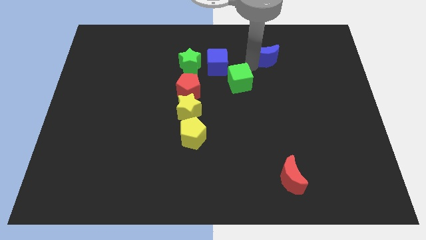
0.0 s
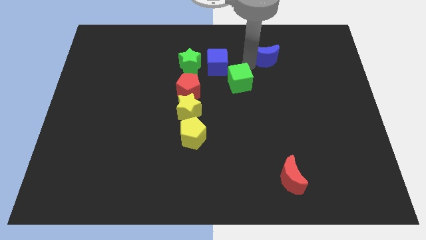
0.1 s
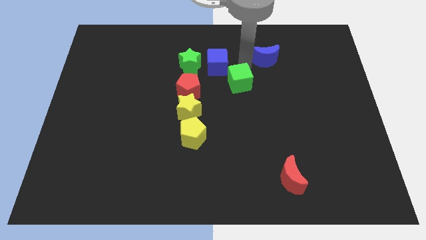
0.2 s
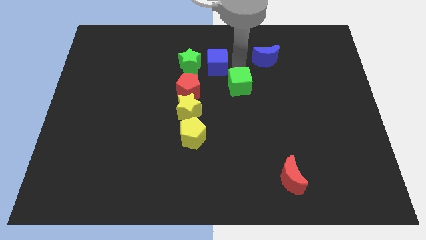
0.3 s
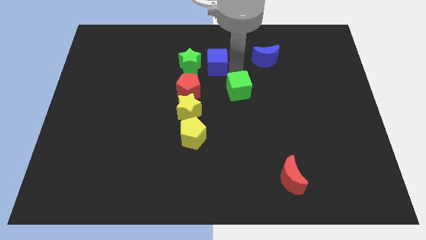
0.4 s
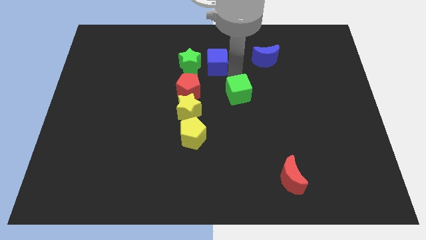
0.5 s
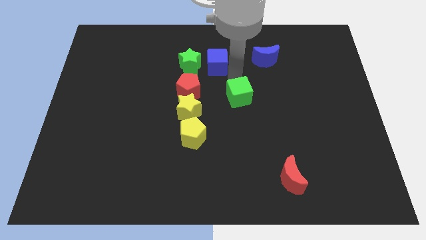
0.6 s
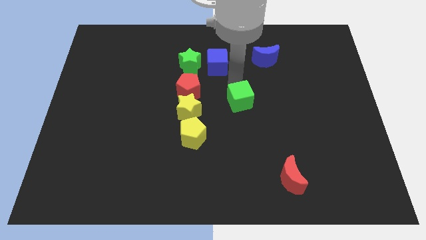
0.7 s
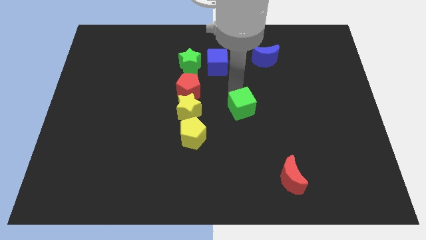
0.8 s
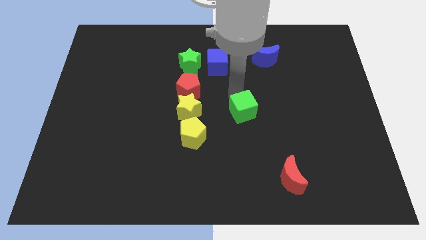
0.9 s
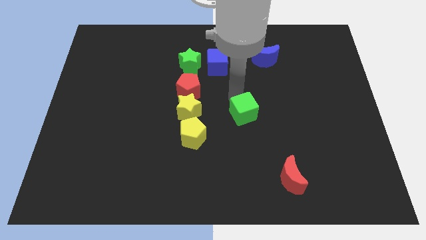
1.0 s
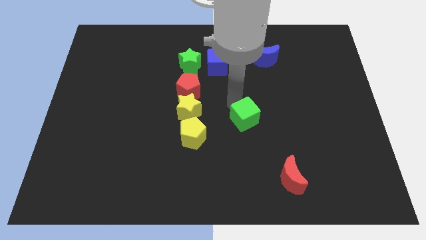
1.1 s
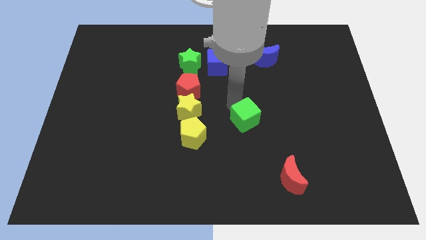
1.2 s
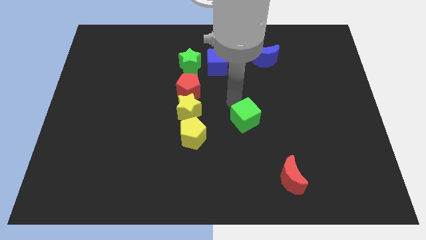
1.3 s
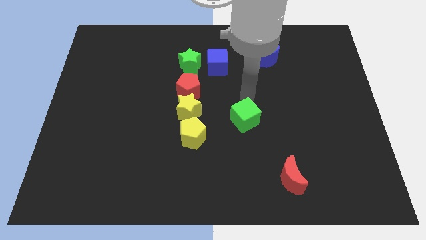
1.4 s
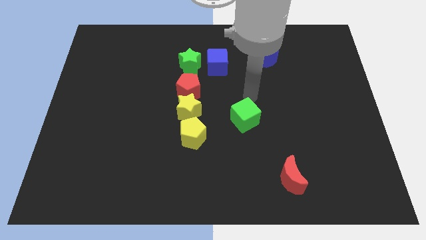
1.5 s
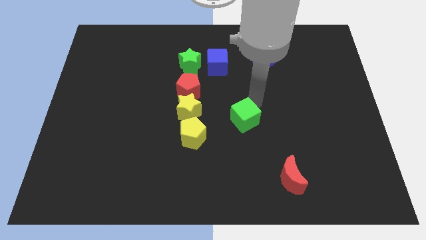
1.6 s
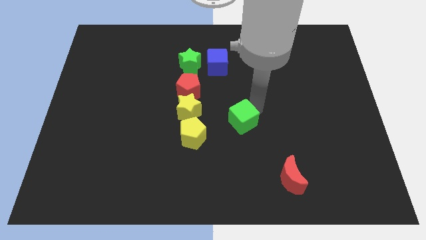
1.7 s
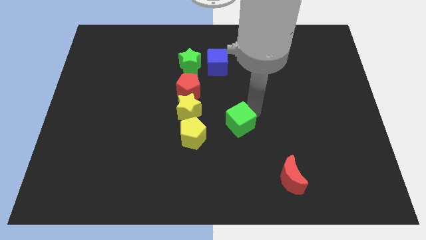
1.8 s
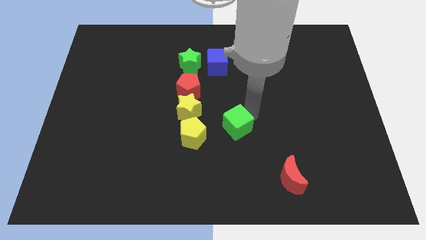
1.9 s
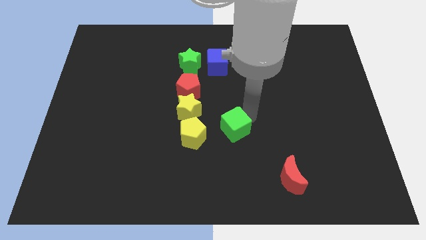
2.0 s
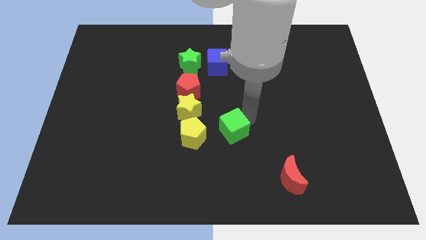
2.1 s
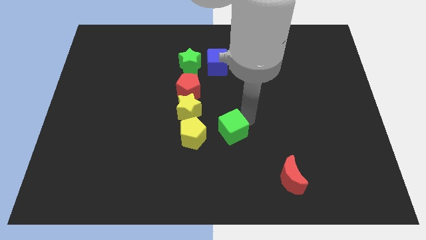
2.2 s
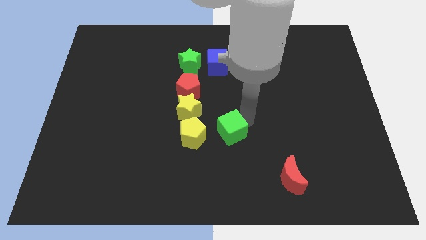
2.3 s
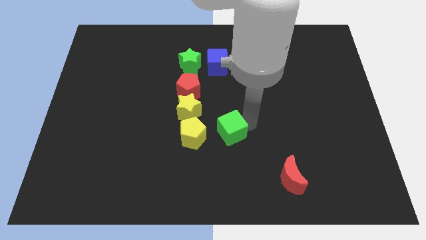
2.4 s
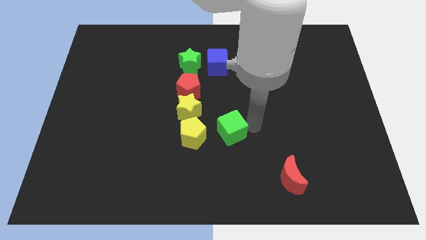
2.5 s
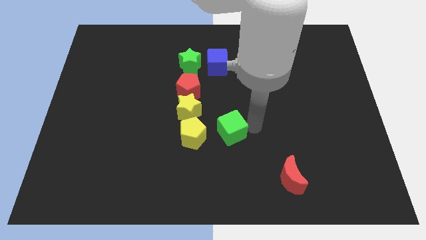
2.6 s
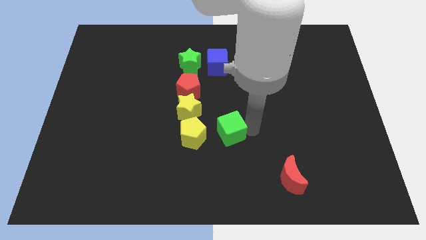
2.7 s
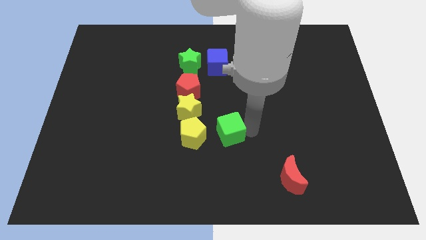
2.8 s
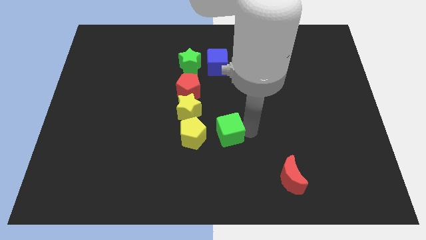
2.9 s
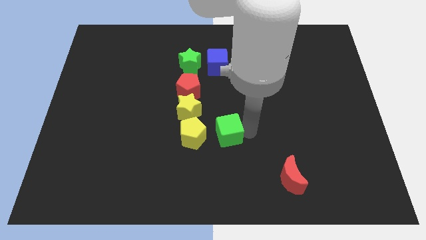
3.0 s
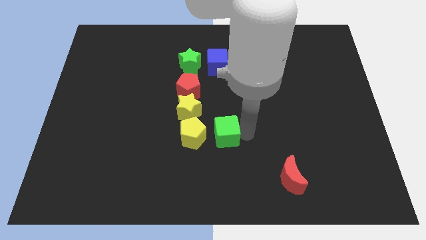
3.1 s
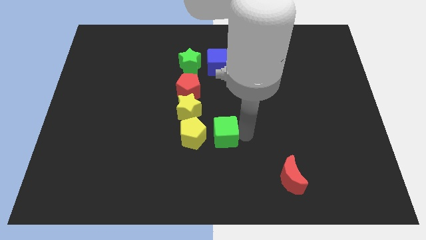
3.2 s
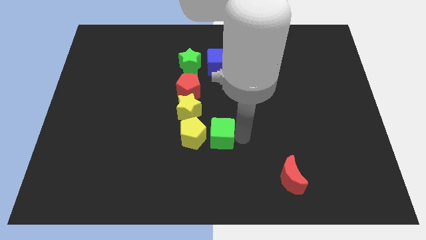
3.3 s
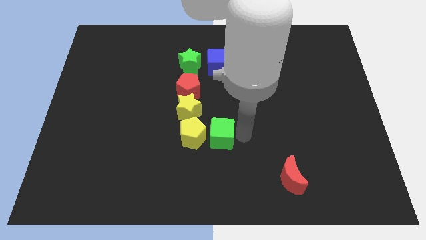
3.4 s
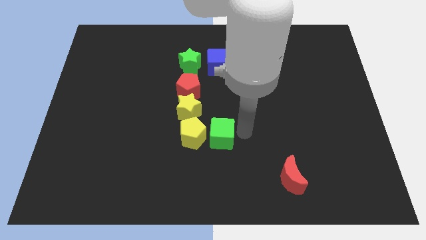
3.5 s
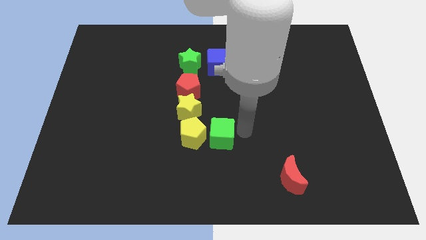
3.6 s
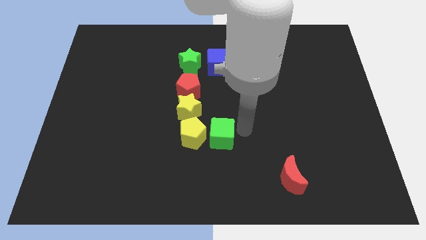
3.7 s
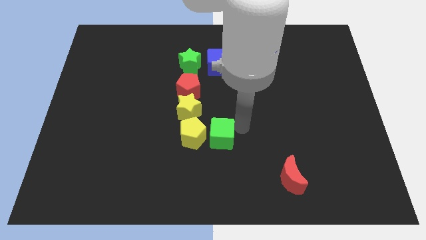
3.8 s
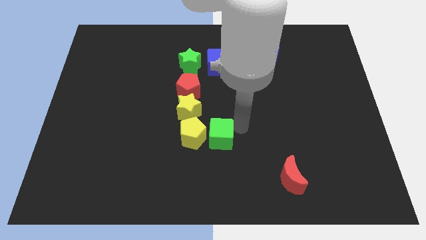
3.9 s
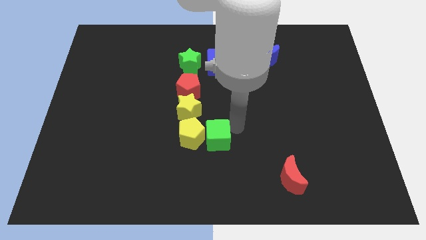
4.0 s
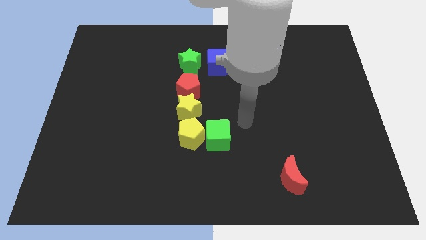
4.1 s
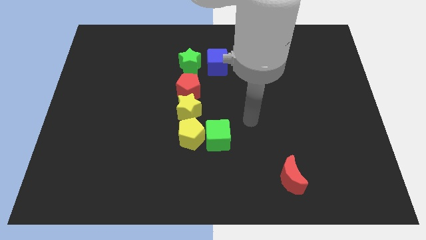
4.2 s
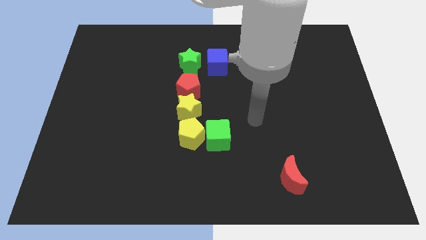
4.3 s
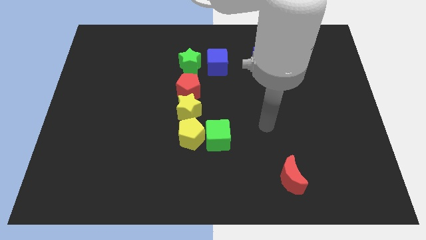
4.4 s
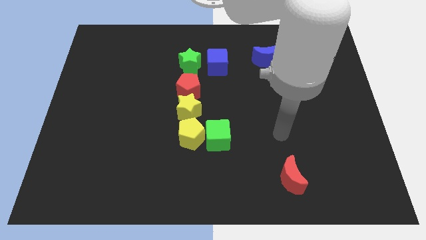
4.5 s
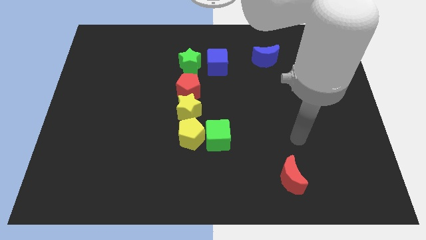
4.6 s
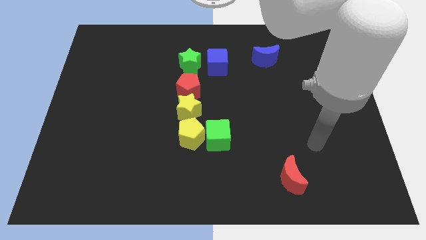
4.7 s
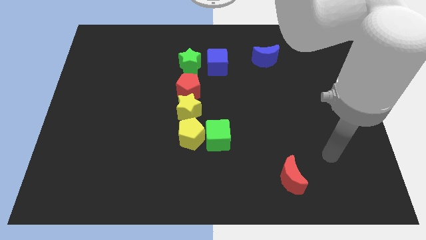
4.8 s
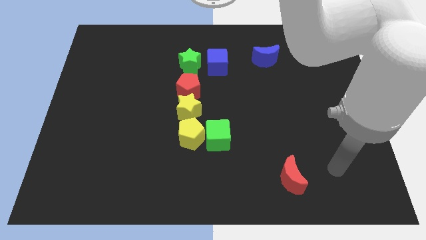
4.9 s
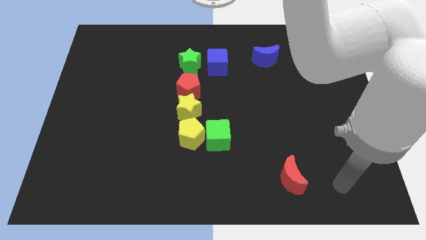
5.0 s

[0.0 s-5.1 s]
add green cube into yellow pentagon

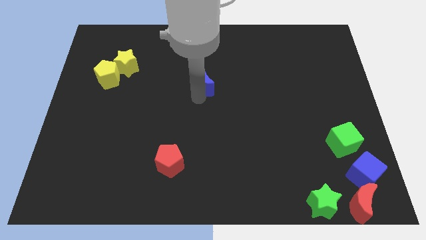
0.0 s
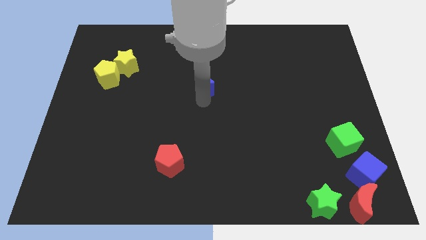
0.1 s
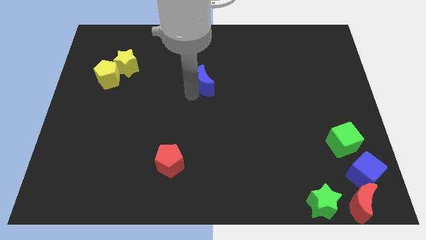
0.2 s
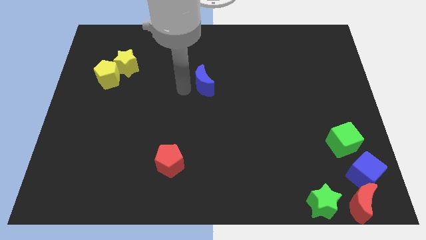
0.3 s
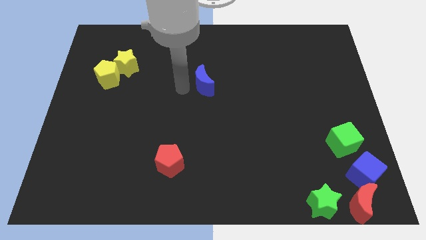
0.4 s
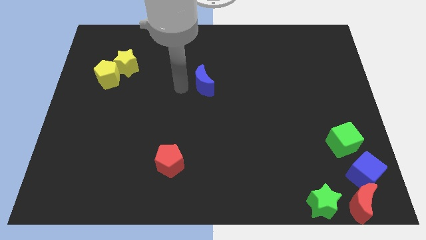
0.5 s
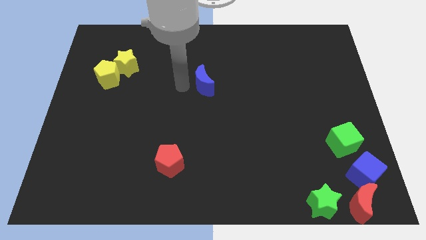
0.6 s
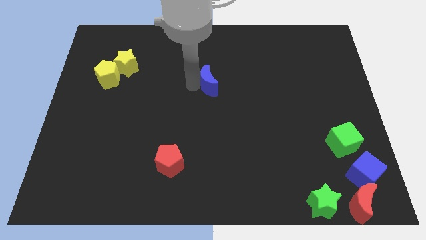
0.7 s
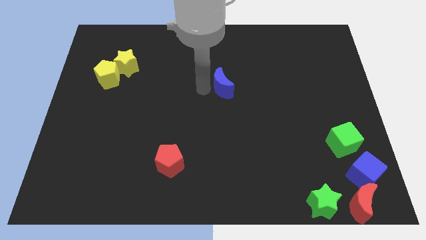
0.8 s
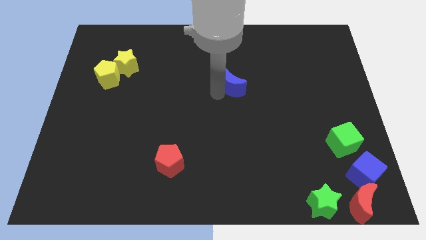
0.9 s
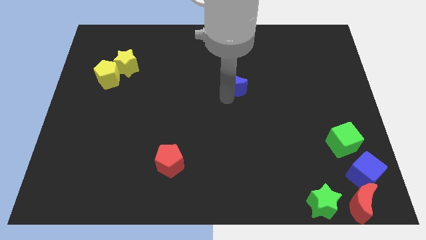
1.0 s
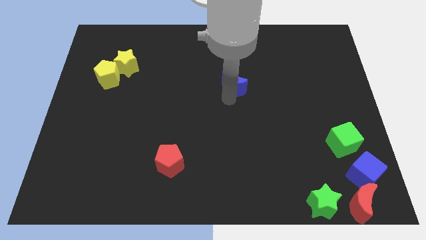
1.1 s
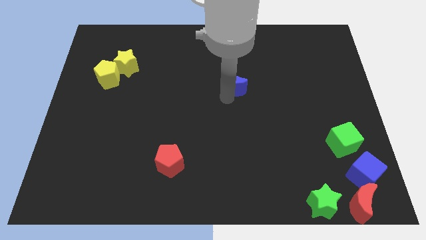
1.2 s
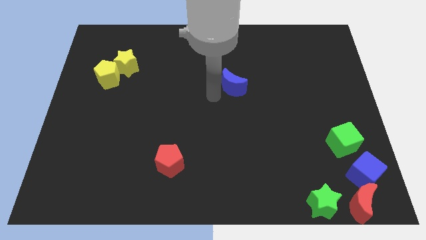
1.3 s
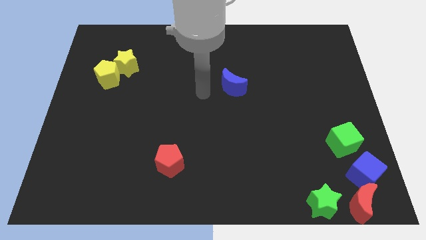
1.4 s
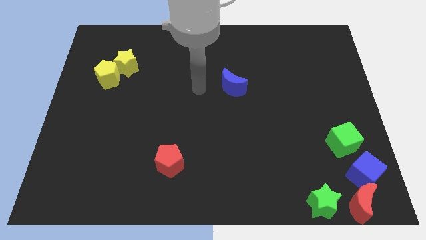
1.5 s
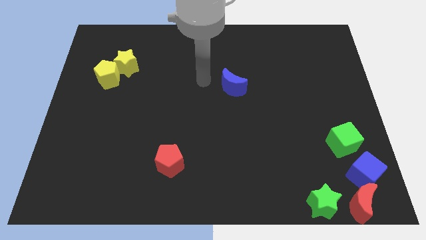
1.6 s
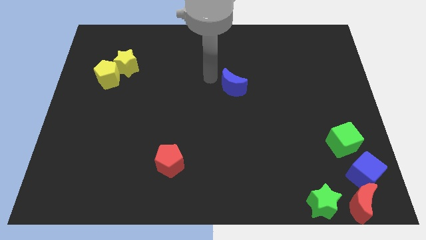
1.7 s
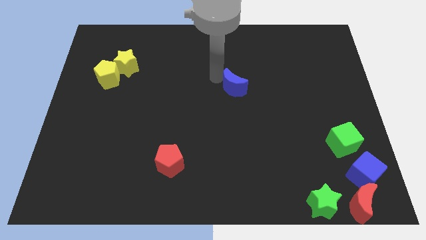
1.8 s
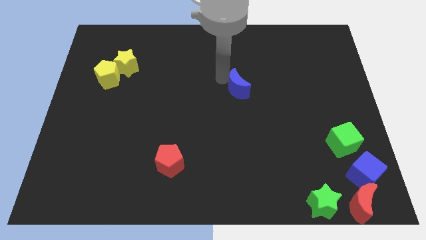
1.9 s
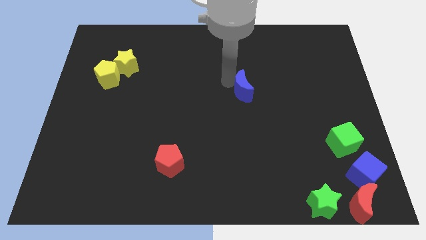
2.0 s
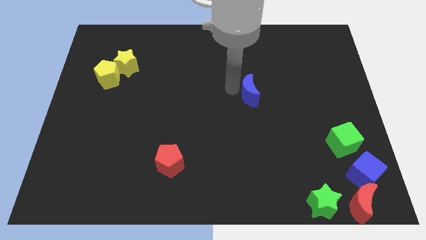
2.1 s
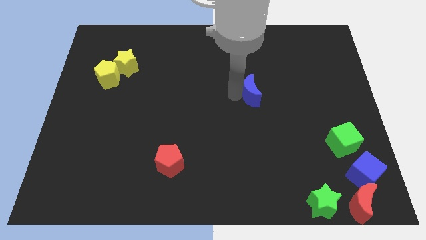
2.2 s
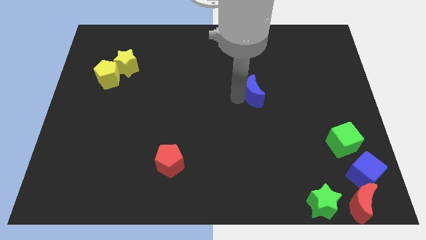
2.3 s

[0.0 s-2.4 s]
slide the blue crescent slightly to the right

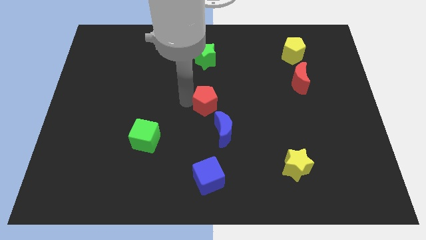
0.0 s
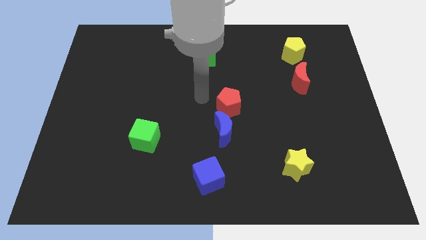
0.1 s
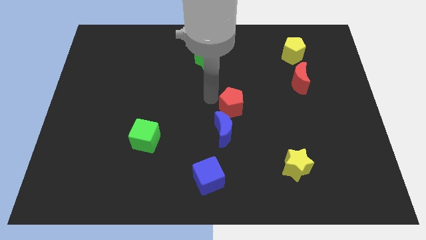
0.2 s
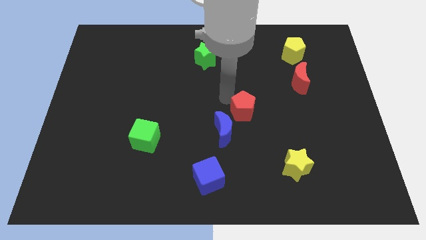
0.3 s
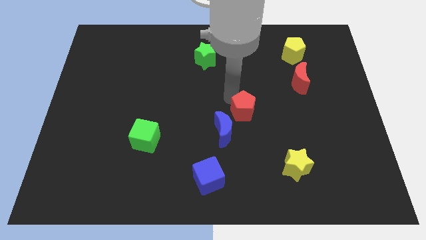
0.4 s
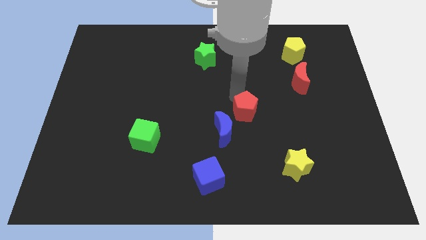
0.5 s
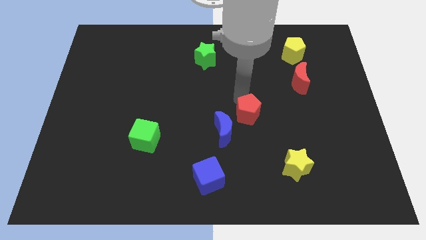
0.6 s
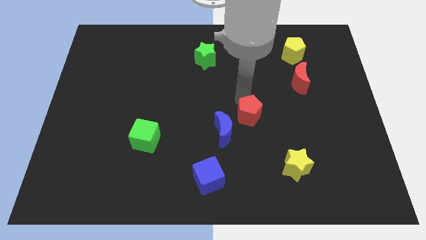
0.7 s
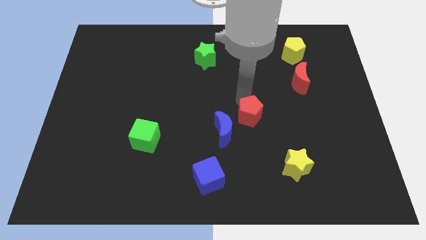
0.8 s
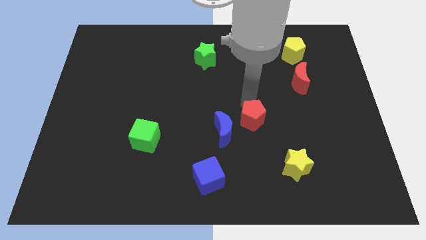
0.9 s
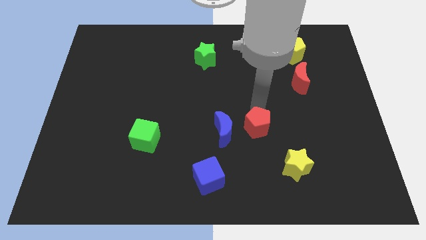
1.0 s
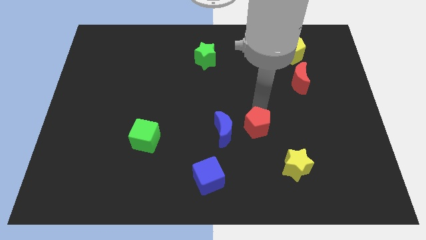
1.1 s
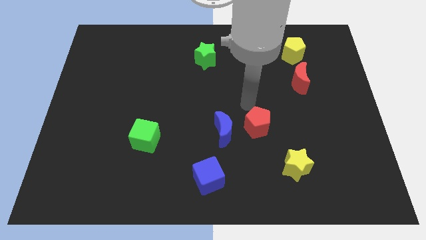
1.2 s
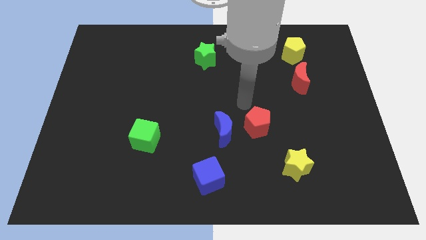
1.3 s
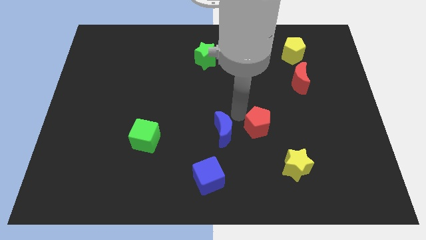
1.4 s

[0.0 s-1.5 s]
push the red pentagon to the right side of the blue moon
